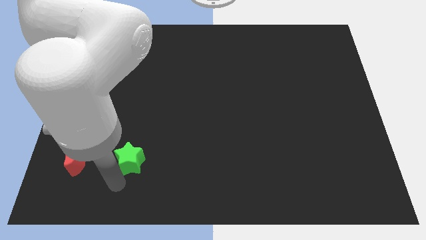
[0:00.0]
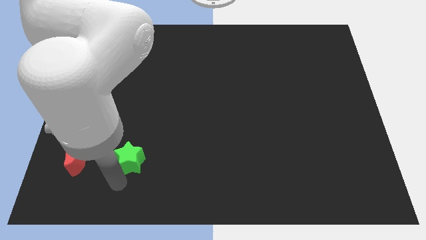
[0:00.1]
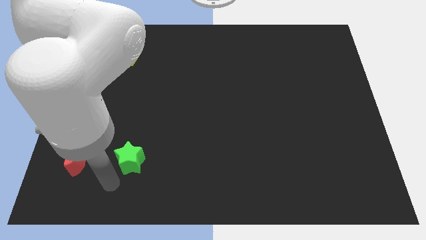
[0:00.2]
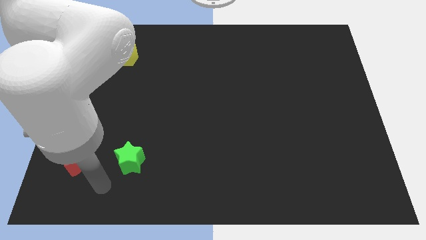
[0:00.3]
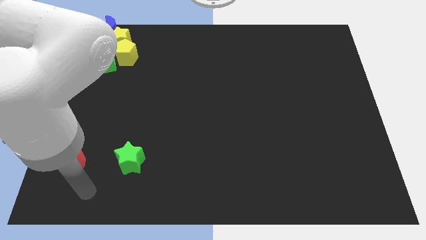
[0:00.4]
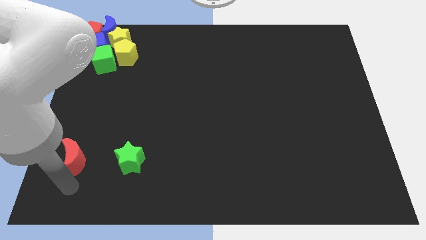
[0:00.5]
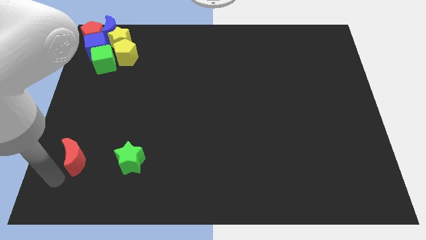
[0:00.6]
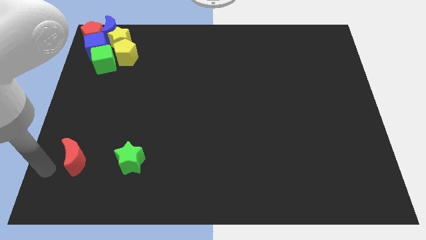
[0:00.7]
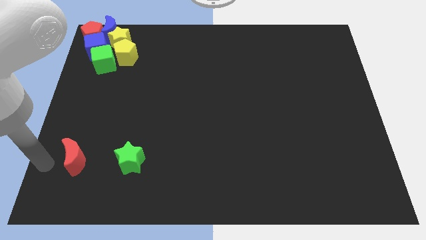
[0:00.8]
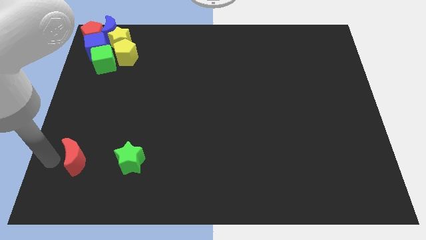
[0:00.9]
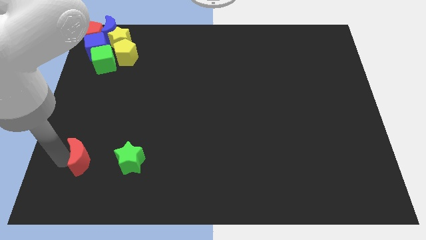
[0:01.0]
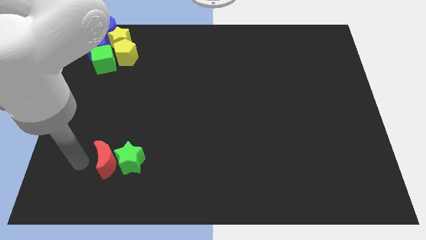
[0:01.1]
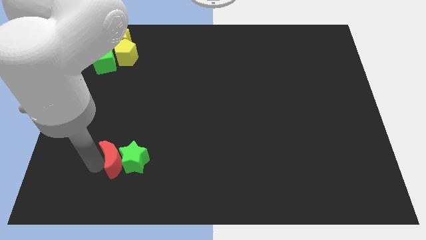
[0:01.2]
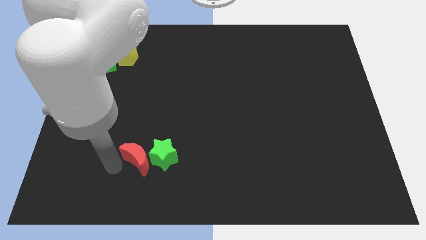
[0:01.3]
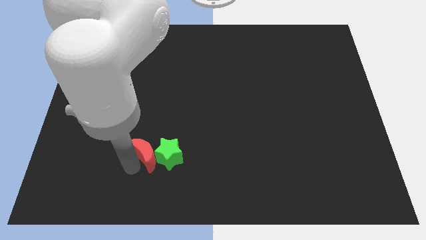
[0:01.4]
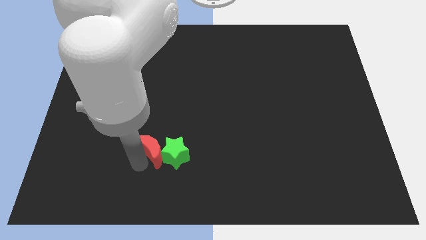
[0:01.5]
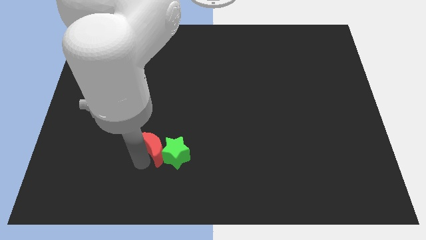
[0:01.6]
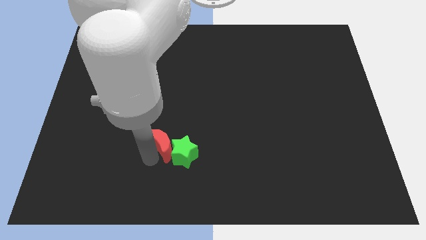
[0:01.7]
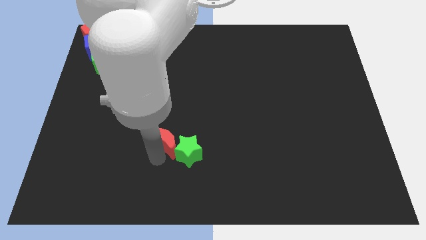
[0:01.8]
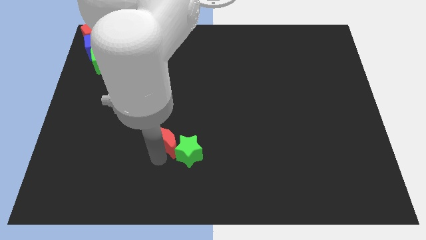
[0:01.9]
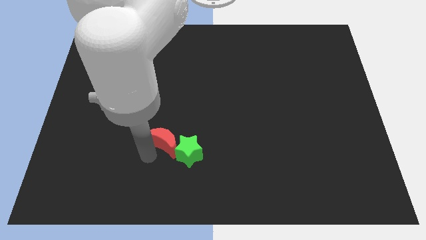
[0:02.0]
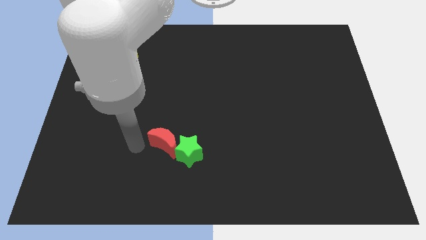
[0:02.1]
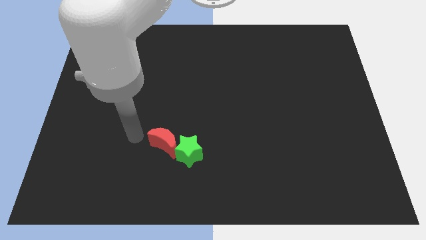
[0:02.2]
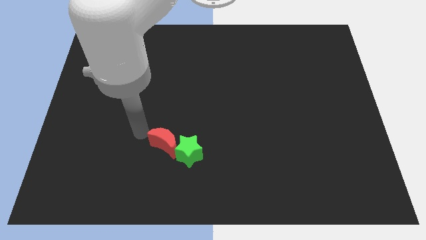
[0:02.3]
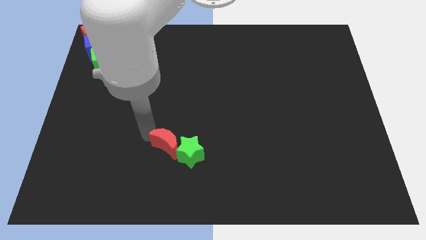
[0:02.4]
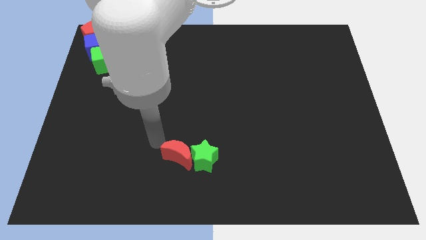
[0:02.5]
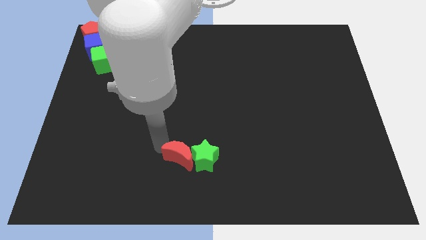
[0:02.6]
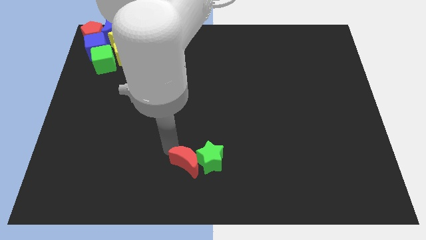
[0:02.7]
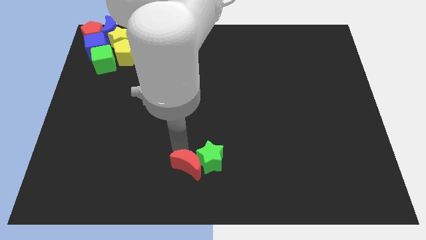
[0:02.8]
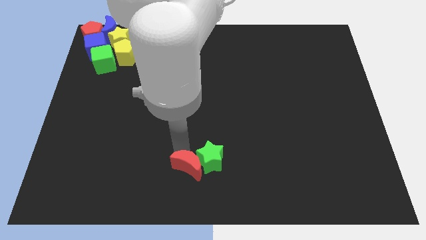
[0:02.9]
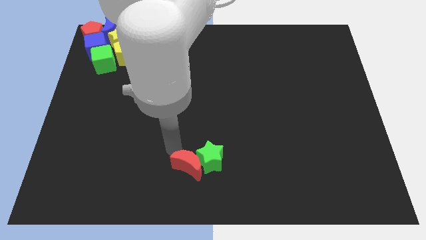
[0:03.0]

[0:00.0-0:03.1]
push the red moon into the green star

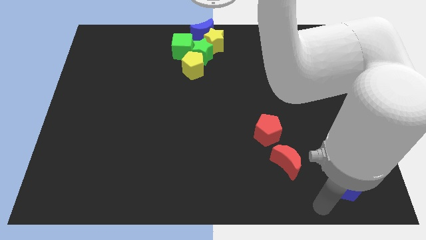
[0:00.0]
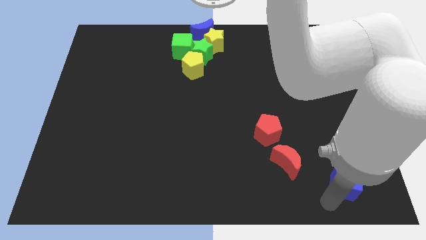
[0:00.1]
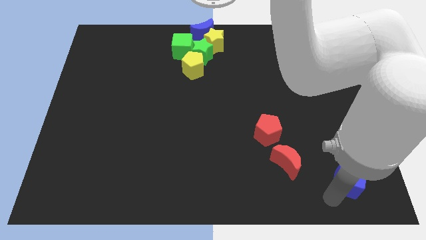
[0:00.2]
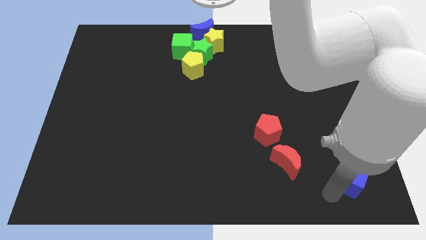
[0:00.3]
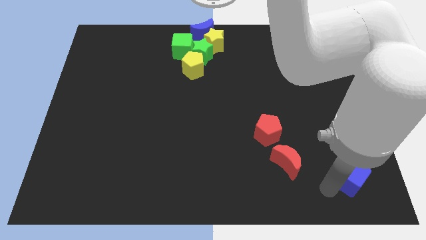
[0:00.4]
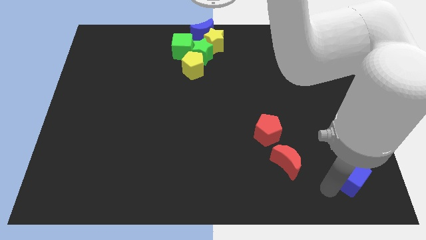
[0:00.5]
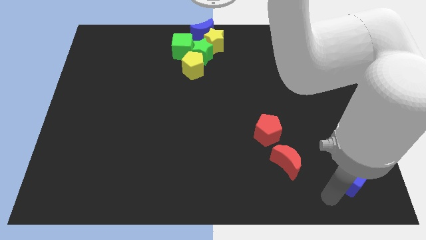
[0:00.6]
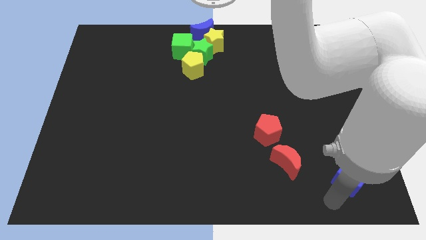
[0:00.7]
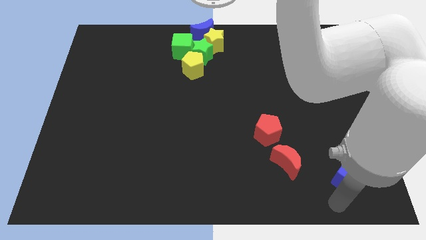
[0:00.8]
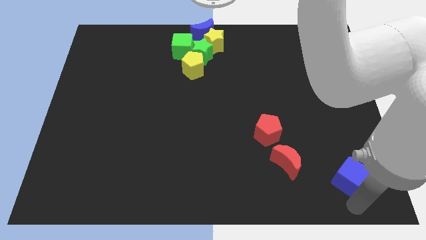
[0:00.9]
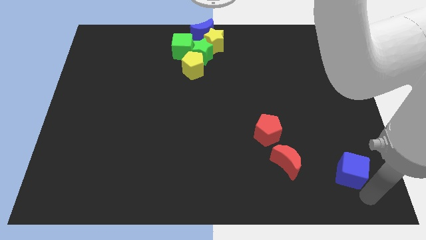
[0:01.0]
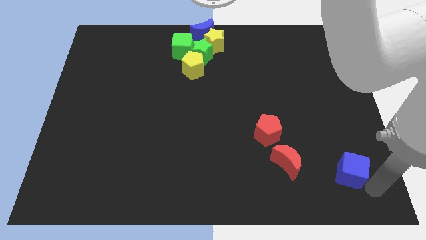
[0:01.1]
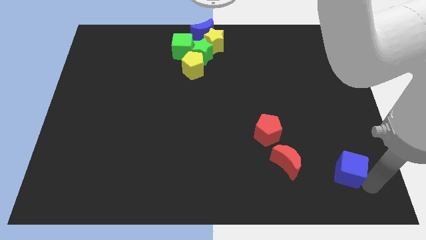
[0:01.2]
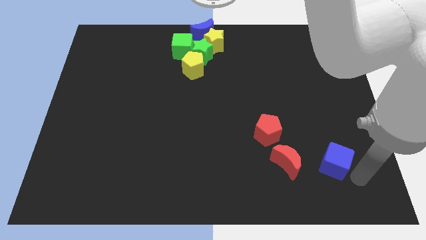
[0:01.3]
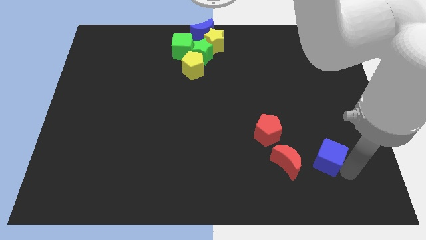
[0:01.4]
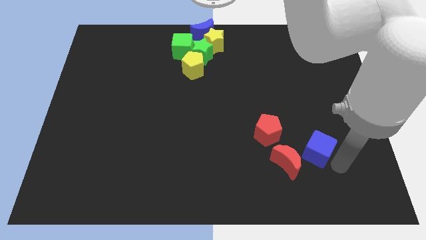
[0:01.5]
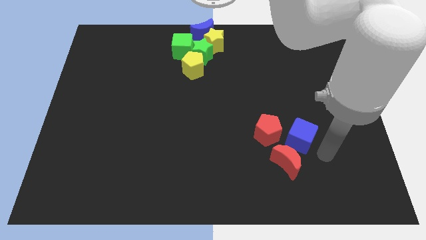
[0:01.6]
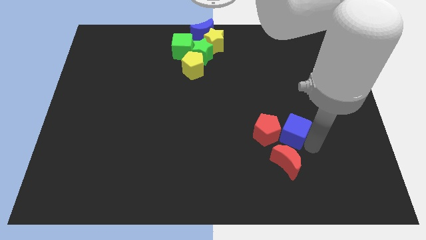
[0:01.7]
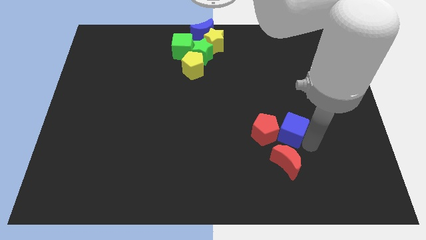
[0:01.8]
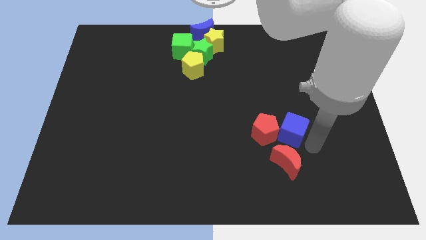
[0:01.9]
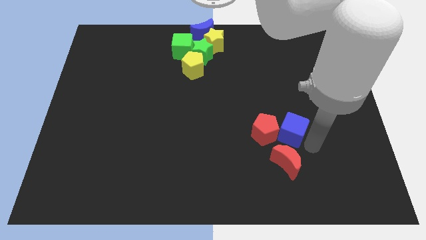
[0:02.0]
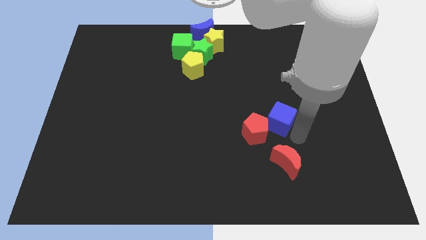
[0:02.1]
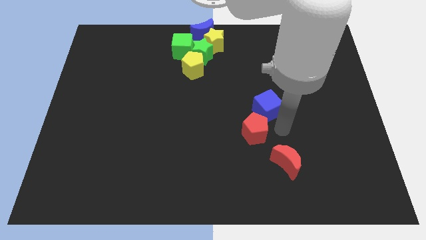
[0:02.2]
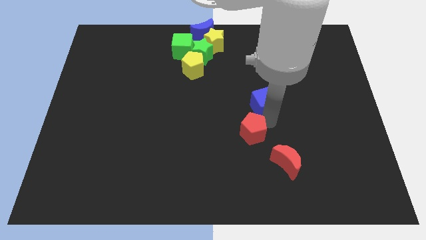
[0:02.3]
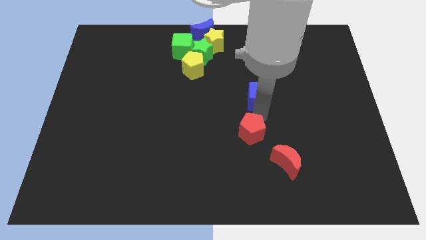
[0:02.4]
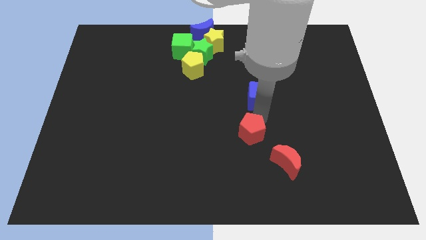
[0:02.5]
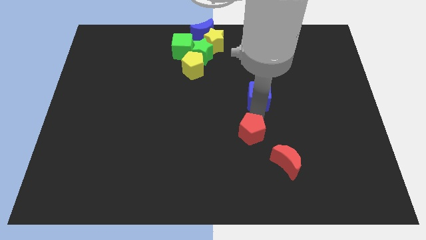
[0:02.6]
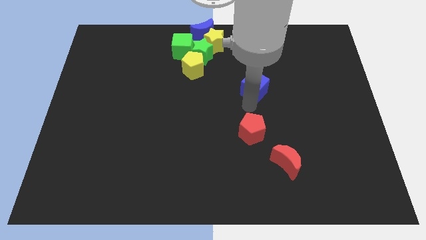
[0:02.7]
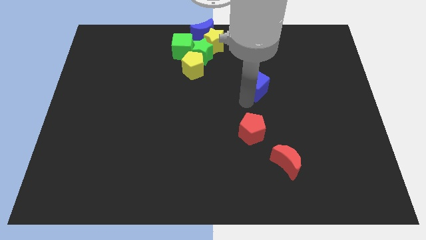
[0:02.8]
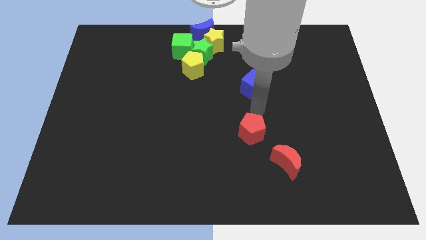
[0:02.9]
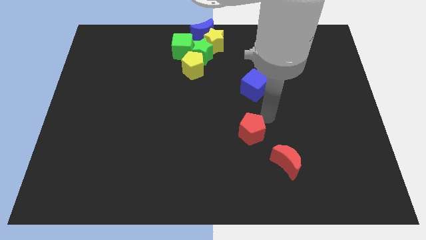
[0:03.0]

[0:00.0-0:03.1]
place the blue cube vertically above the red pentagon

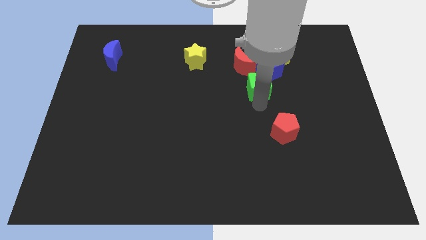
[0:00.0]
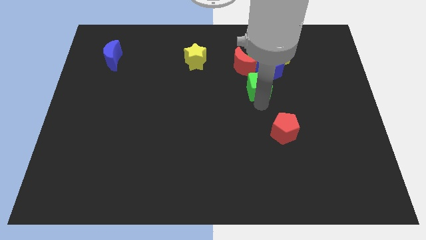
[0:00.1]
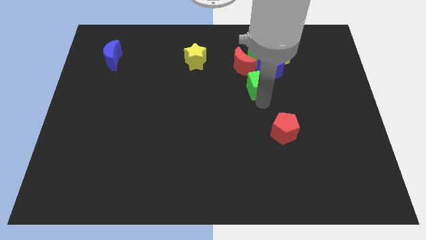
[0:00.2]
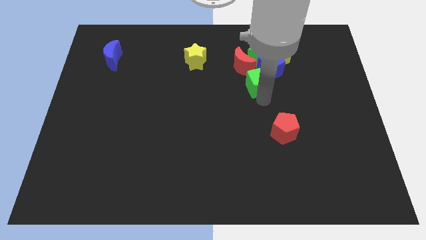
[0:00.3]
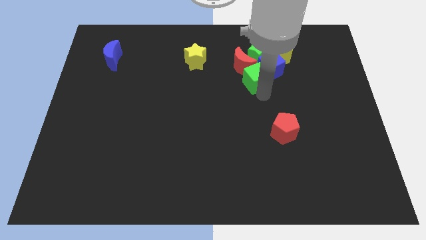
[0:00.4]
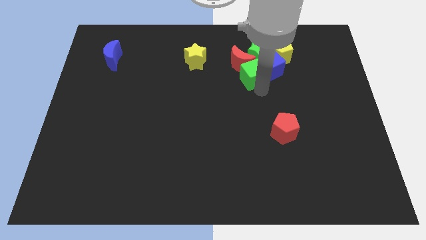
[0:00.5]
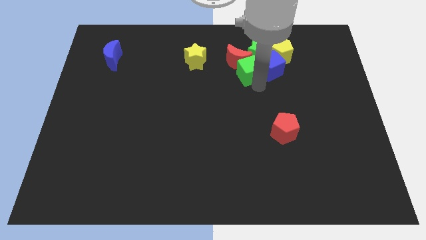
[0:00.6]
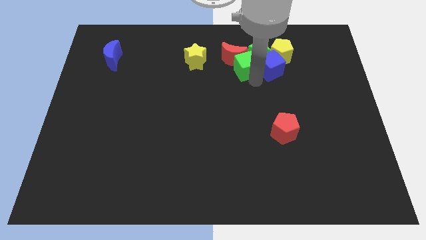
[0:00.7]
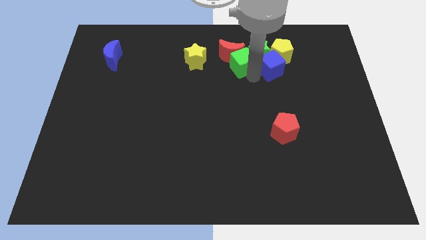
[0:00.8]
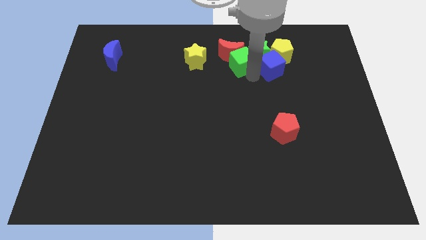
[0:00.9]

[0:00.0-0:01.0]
push the green cube and red crescent towards the top side of the board

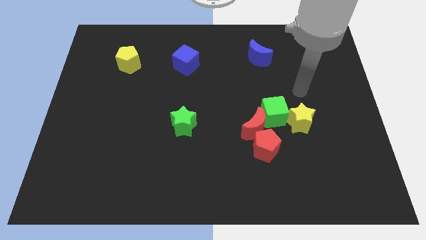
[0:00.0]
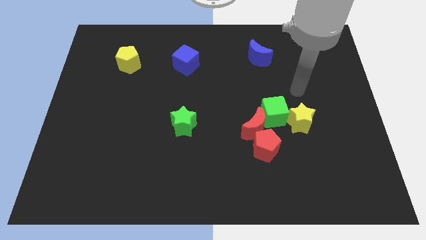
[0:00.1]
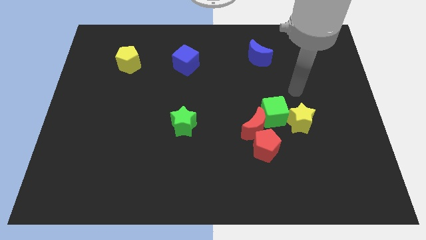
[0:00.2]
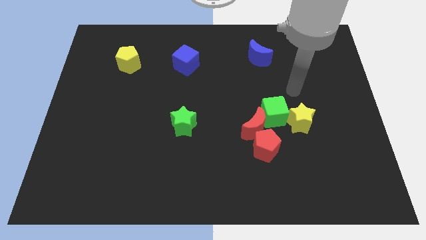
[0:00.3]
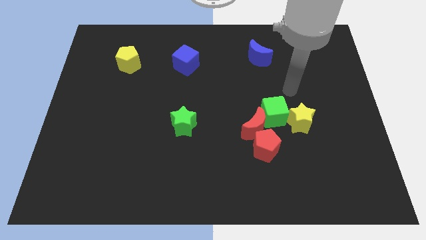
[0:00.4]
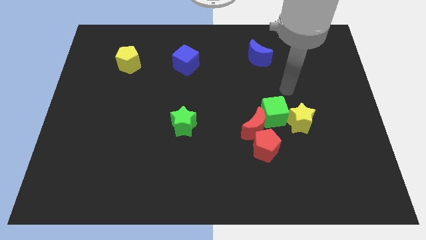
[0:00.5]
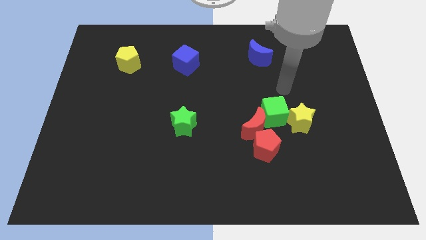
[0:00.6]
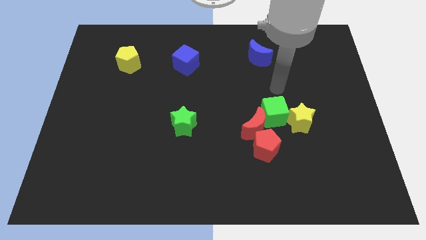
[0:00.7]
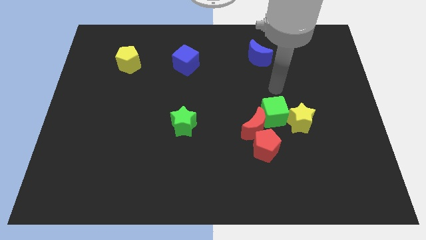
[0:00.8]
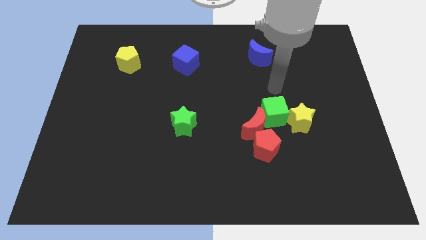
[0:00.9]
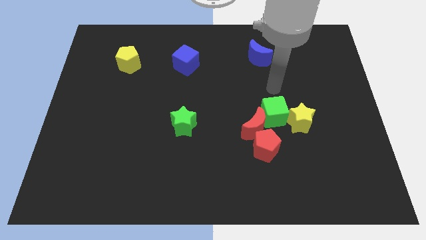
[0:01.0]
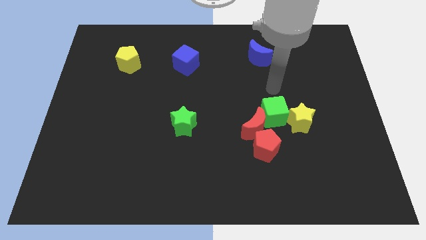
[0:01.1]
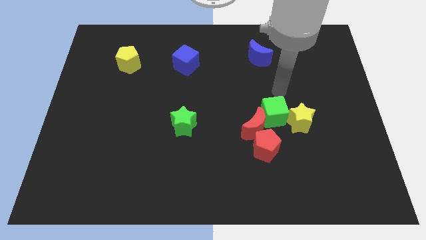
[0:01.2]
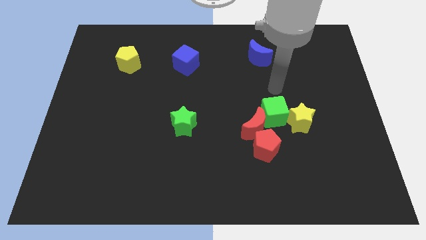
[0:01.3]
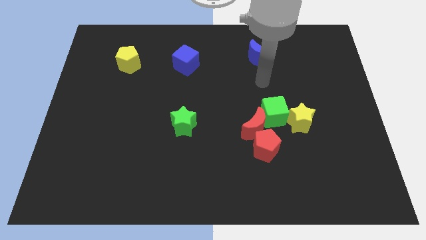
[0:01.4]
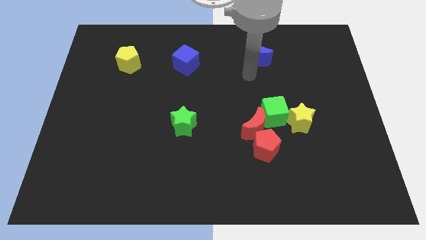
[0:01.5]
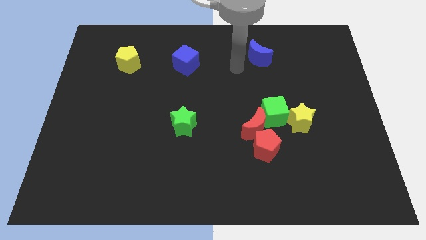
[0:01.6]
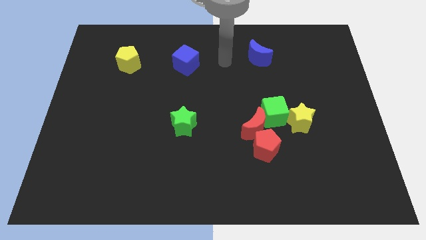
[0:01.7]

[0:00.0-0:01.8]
put your hand between the blue blocks
